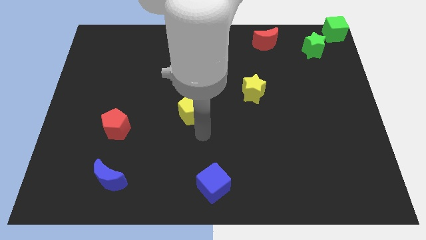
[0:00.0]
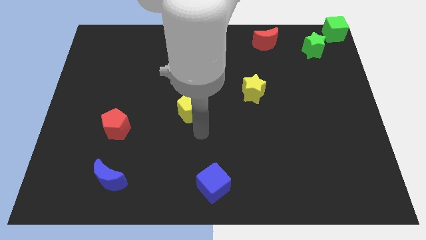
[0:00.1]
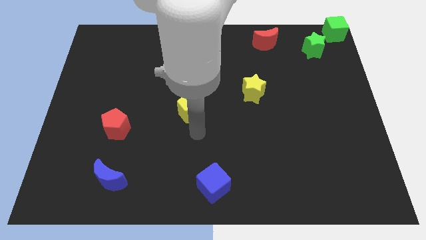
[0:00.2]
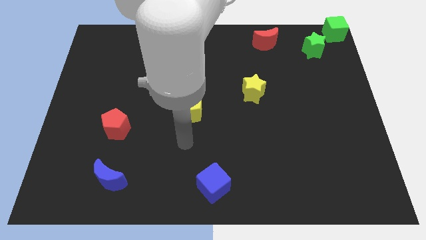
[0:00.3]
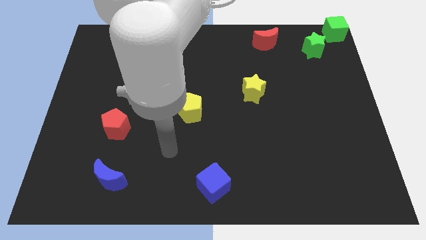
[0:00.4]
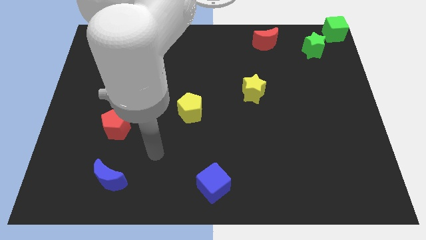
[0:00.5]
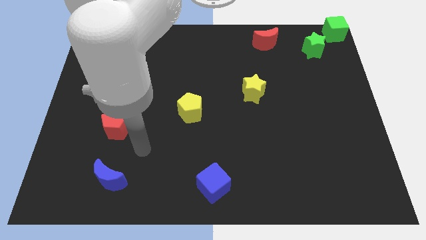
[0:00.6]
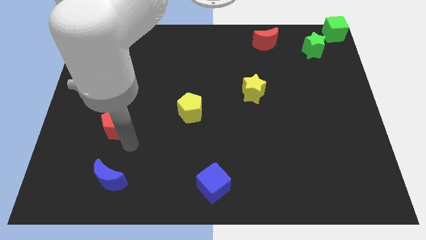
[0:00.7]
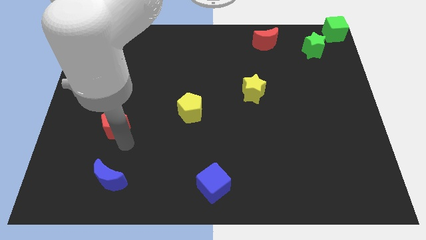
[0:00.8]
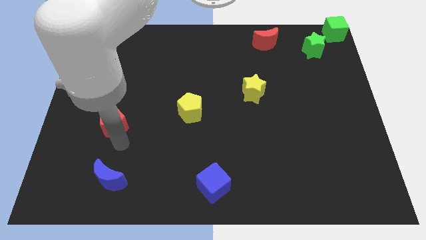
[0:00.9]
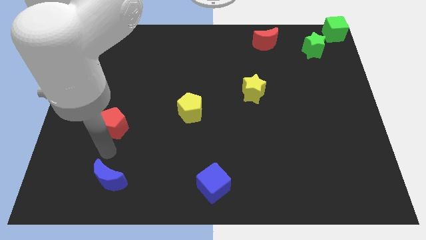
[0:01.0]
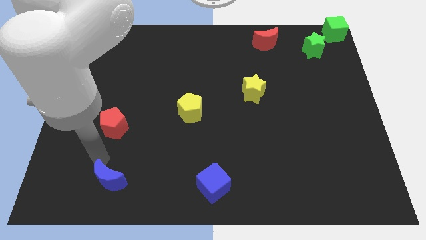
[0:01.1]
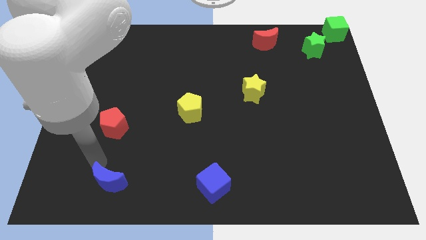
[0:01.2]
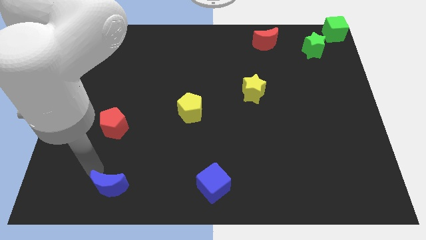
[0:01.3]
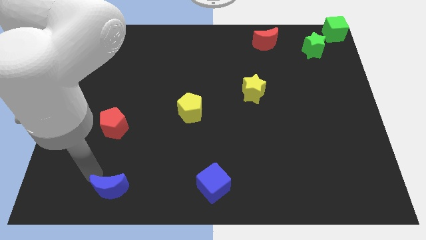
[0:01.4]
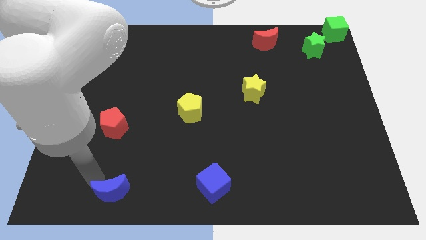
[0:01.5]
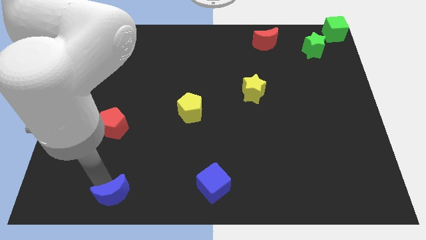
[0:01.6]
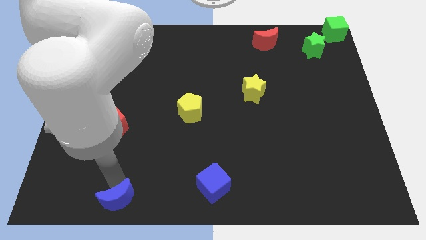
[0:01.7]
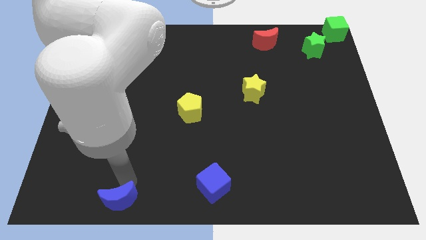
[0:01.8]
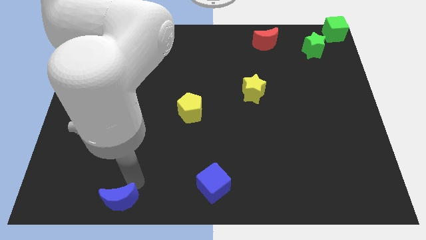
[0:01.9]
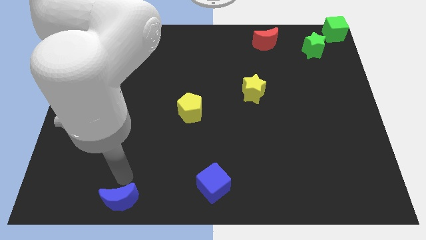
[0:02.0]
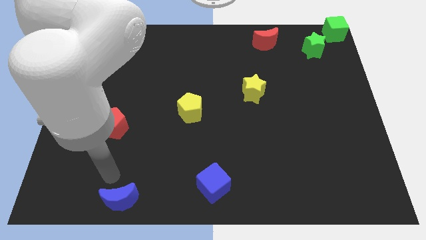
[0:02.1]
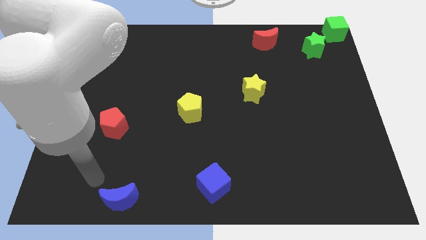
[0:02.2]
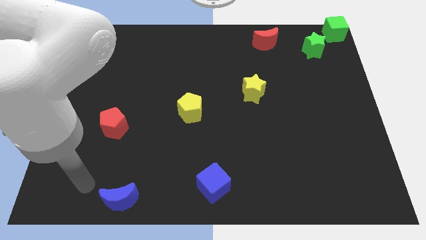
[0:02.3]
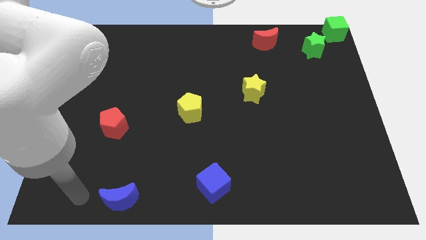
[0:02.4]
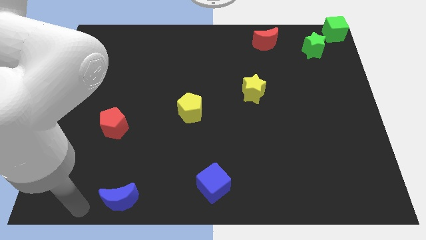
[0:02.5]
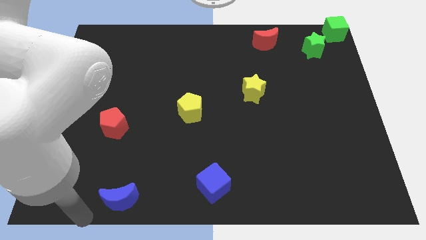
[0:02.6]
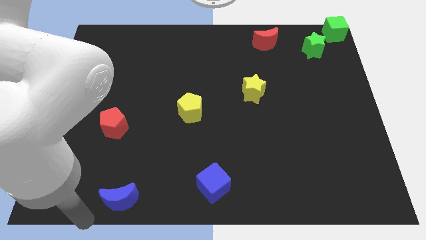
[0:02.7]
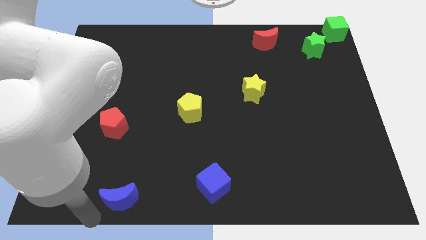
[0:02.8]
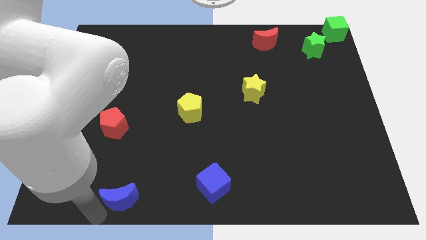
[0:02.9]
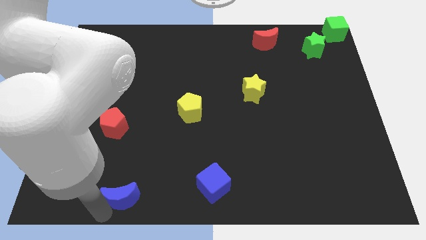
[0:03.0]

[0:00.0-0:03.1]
place the blue crescent left side of blue cube

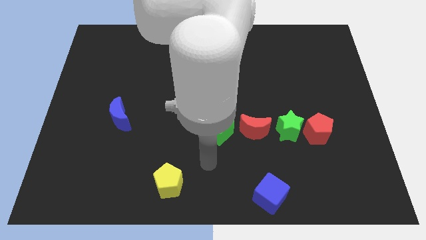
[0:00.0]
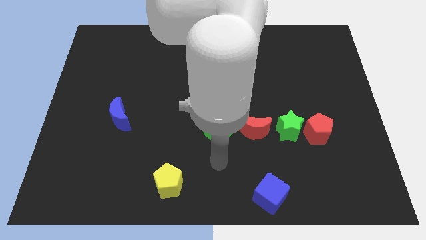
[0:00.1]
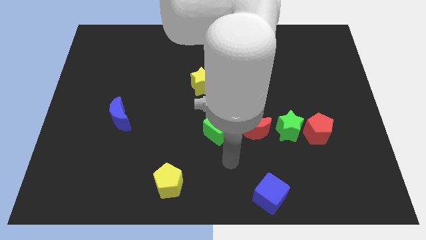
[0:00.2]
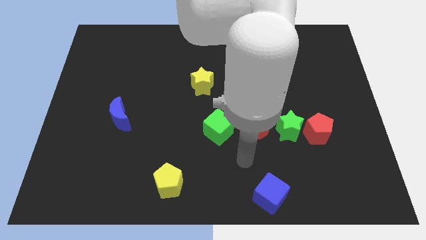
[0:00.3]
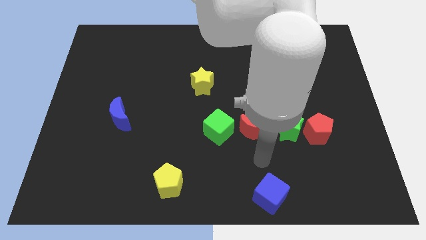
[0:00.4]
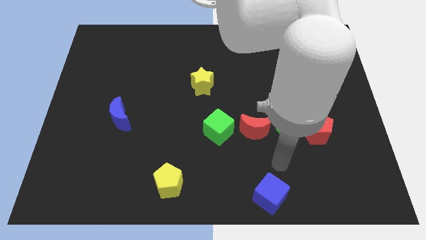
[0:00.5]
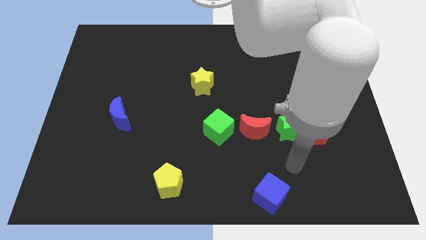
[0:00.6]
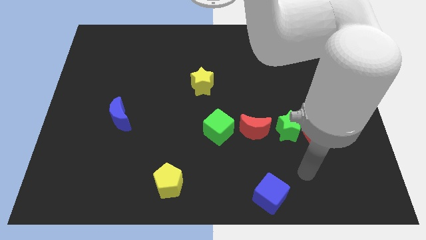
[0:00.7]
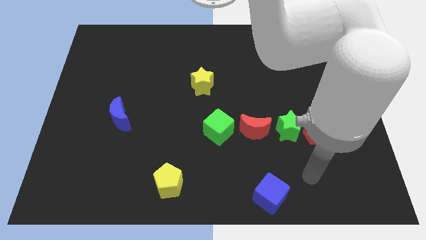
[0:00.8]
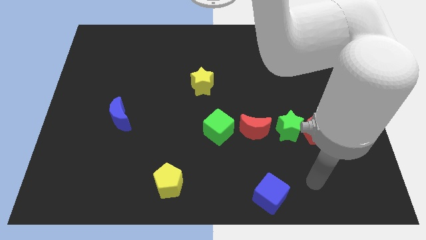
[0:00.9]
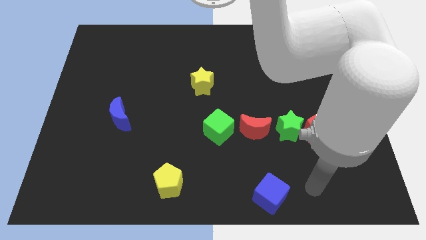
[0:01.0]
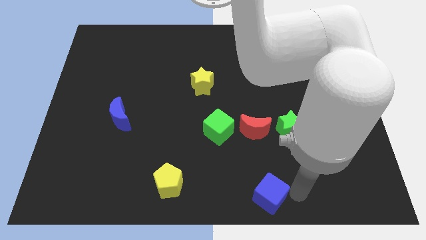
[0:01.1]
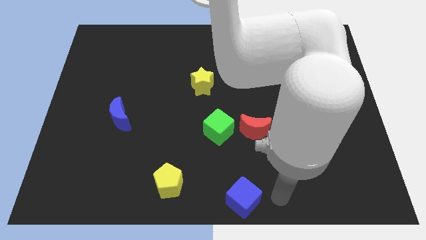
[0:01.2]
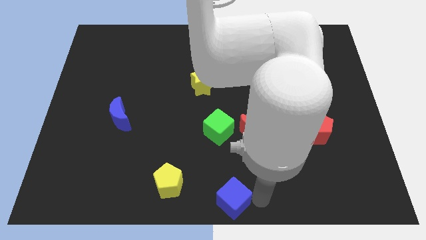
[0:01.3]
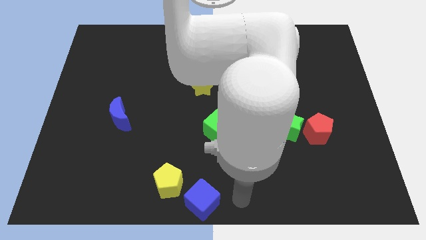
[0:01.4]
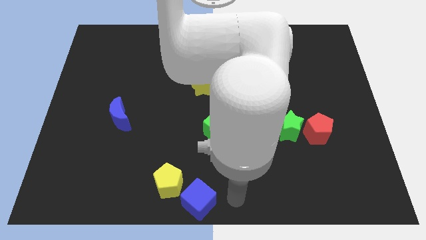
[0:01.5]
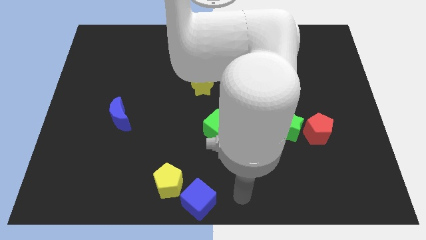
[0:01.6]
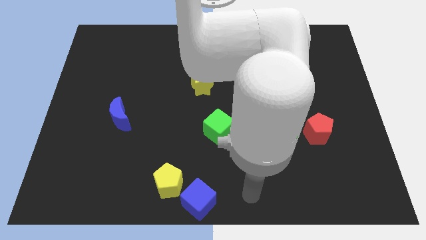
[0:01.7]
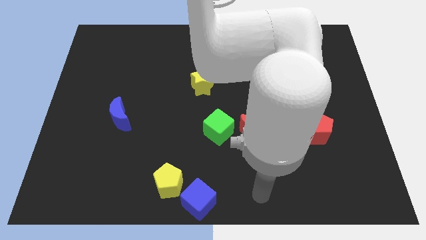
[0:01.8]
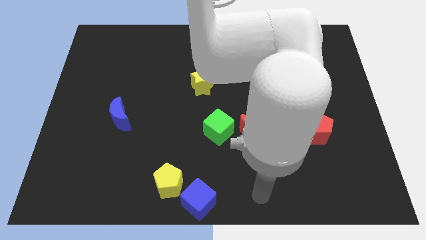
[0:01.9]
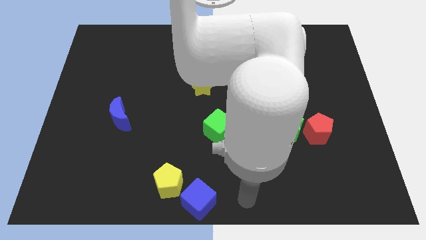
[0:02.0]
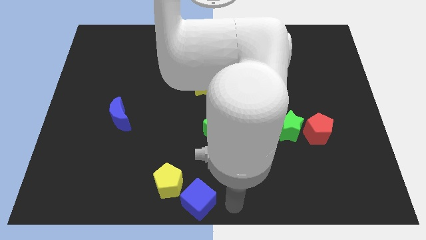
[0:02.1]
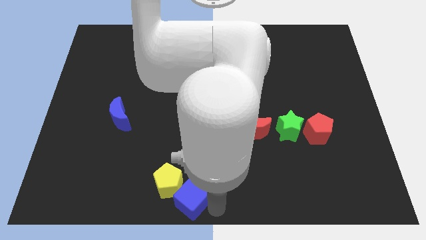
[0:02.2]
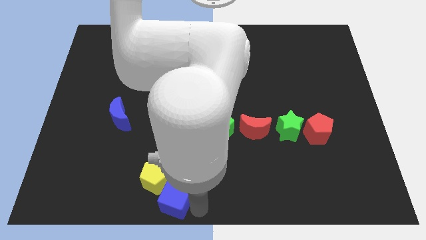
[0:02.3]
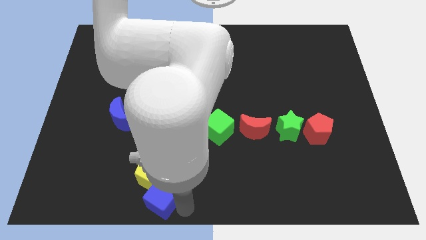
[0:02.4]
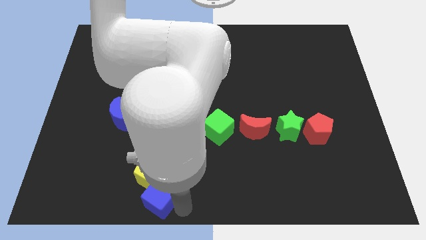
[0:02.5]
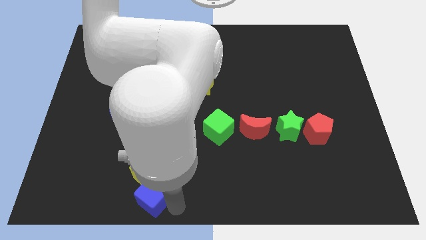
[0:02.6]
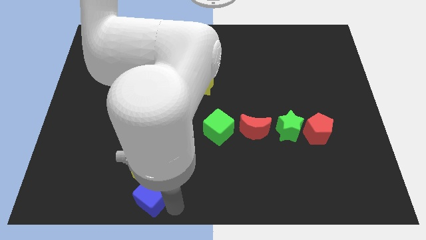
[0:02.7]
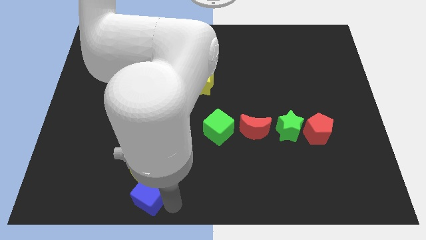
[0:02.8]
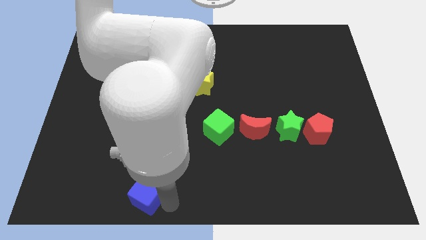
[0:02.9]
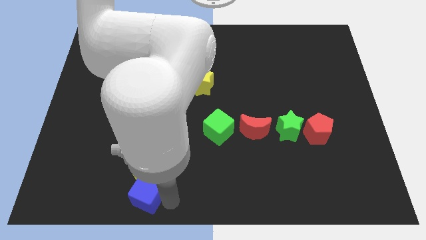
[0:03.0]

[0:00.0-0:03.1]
push blue cube into yellow pentagon

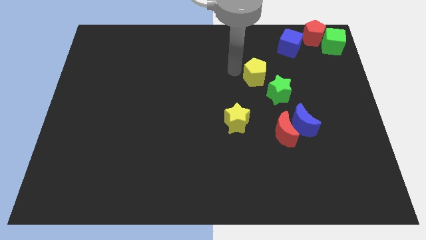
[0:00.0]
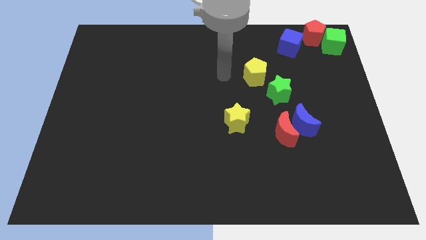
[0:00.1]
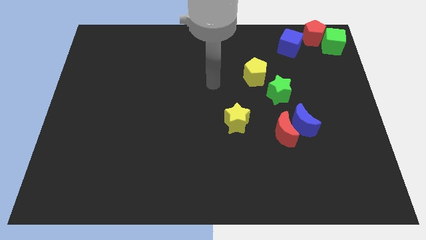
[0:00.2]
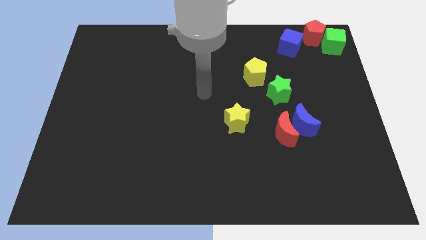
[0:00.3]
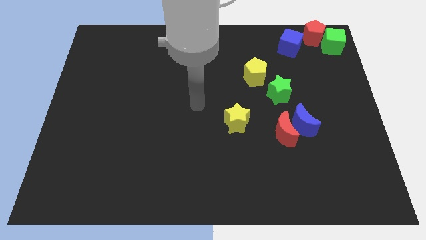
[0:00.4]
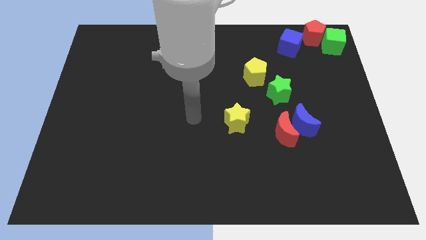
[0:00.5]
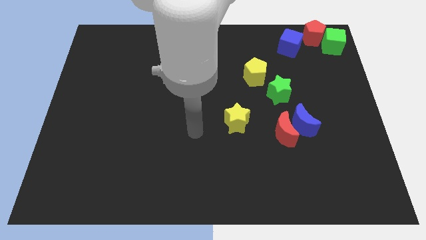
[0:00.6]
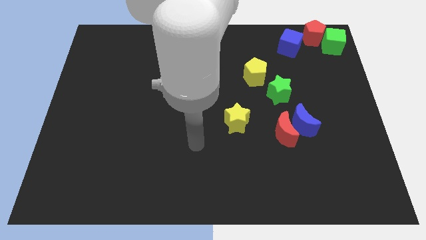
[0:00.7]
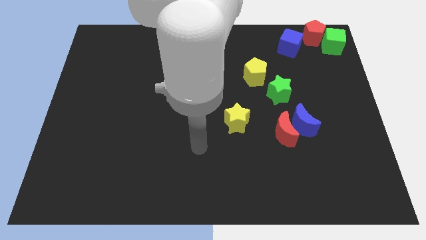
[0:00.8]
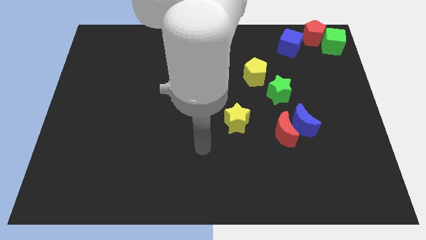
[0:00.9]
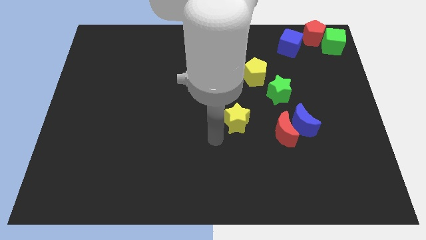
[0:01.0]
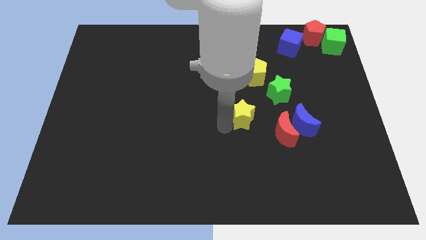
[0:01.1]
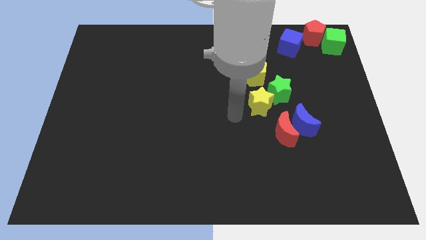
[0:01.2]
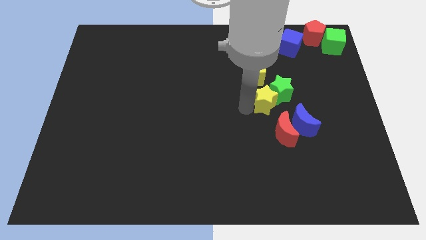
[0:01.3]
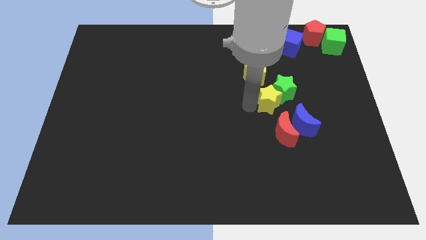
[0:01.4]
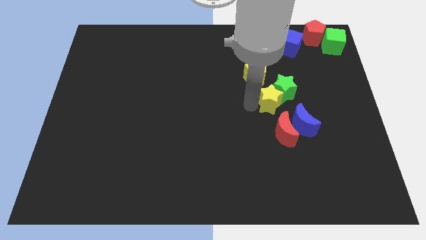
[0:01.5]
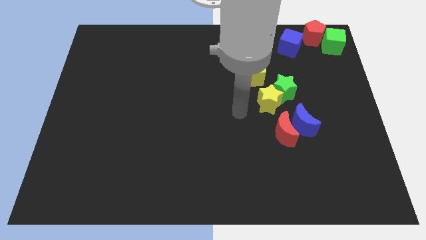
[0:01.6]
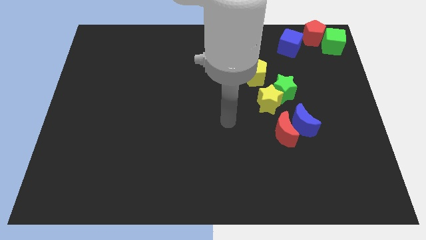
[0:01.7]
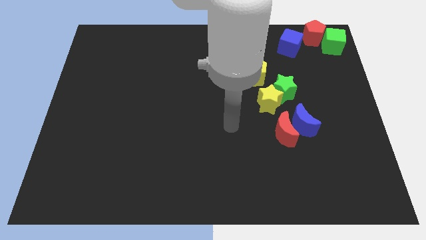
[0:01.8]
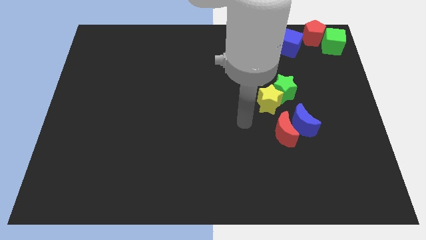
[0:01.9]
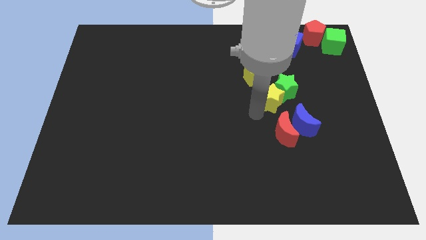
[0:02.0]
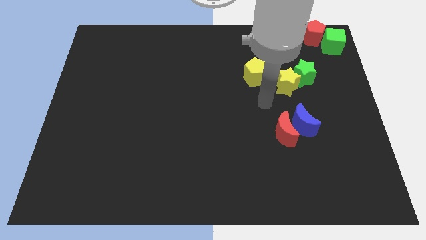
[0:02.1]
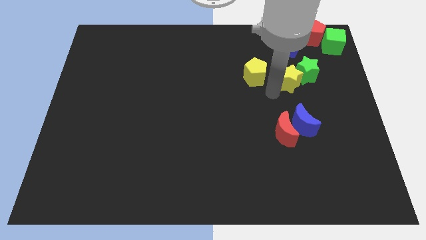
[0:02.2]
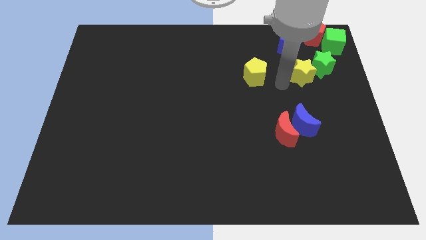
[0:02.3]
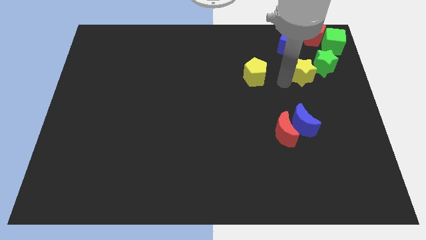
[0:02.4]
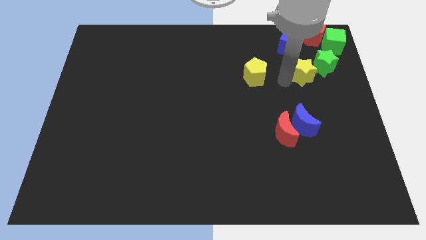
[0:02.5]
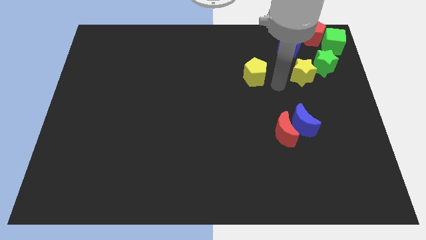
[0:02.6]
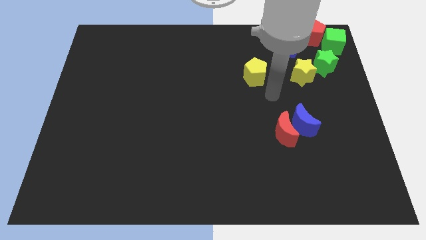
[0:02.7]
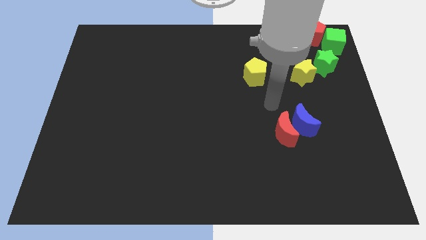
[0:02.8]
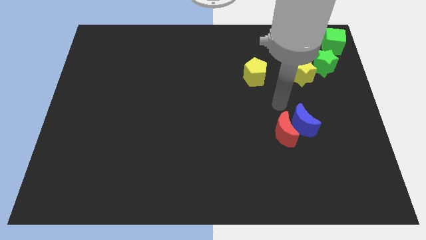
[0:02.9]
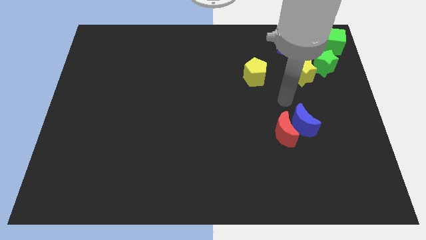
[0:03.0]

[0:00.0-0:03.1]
push the yellow star to the right of the yellow pentagon
